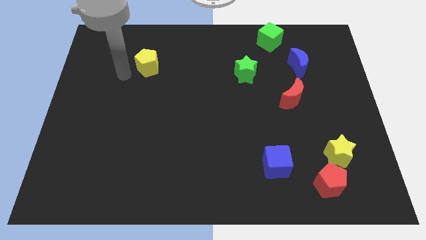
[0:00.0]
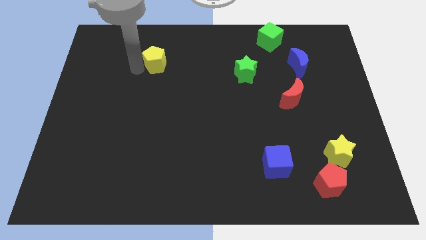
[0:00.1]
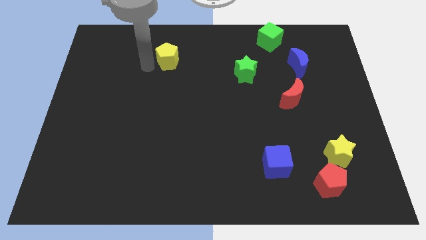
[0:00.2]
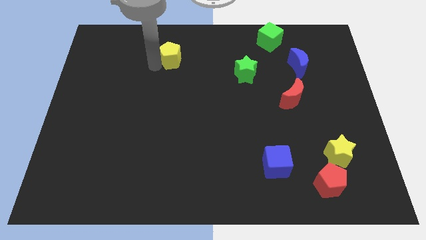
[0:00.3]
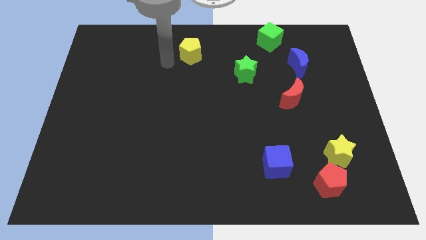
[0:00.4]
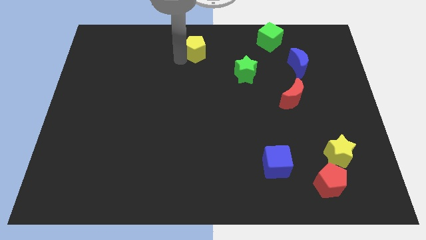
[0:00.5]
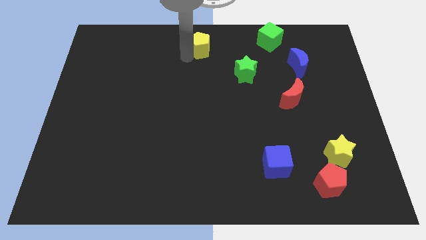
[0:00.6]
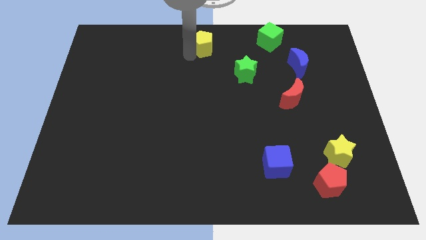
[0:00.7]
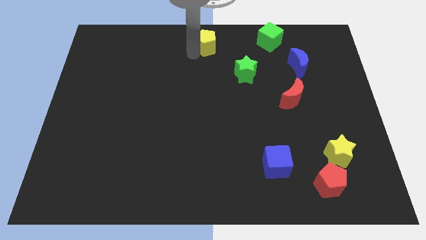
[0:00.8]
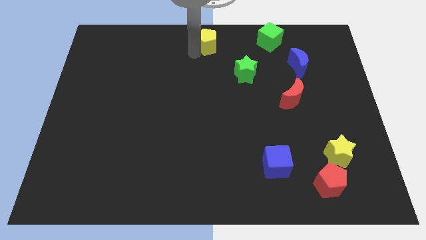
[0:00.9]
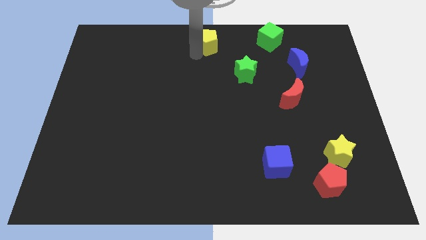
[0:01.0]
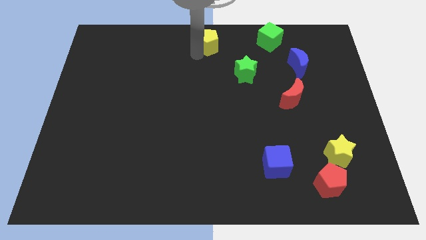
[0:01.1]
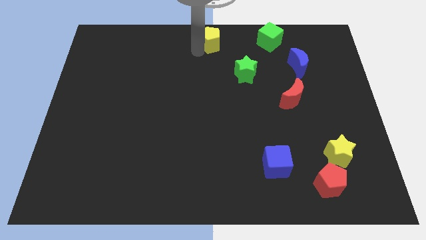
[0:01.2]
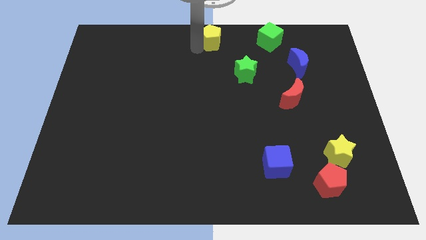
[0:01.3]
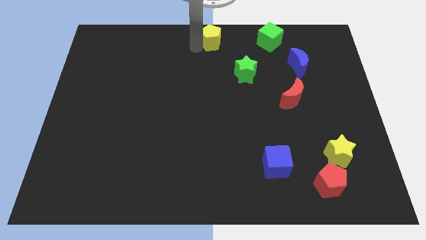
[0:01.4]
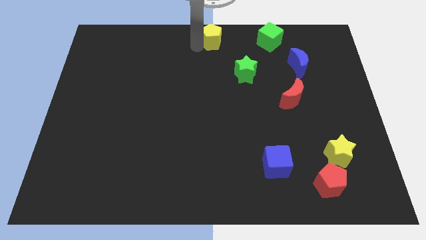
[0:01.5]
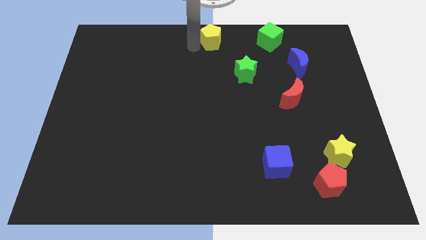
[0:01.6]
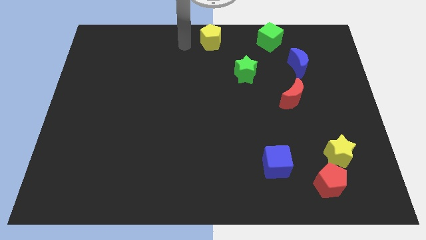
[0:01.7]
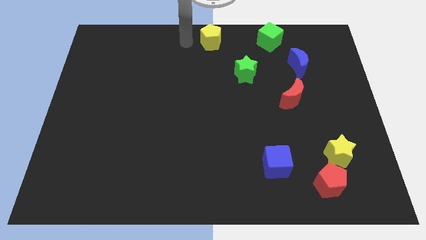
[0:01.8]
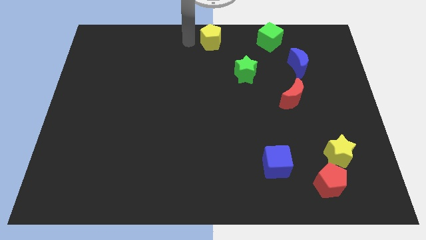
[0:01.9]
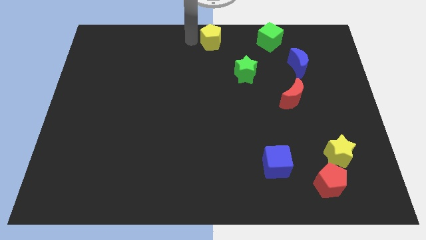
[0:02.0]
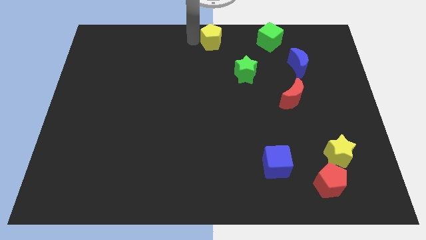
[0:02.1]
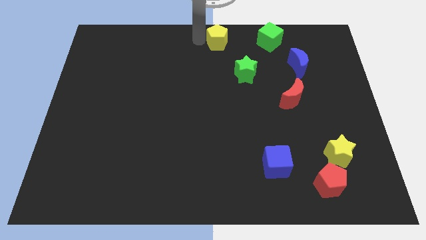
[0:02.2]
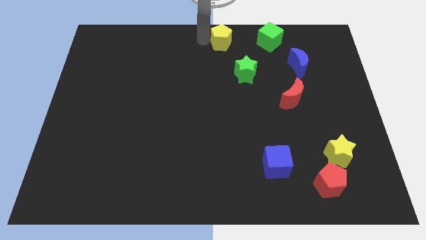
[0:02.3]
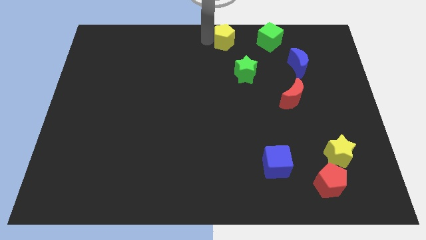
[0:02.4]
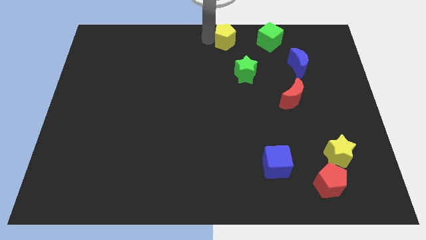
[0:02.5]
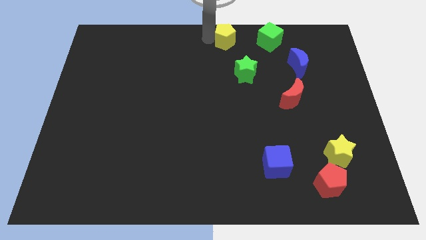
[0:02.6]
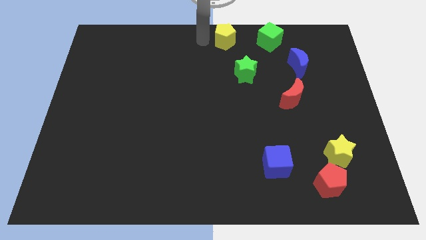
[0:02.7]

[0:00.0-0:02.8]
push the yellow pentagon towards the top center of the board

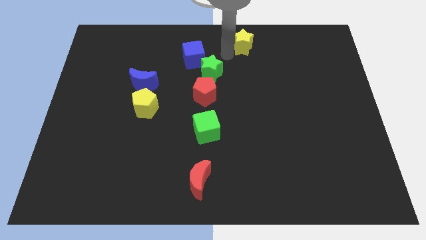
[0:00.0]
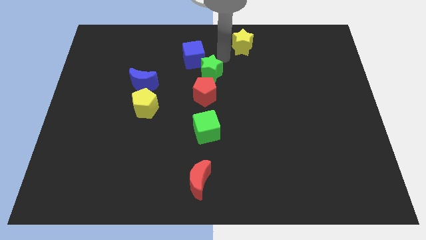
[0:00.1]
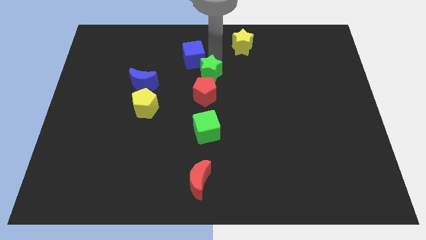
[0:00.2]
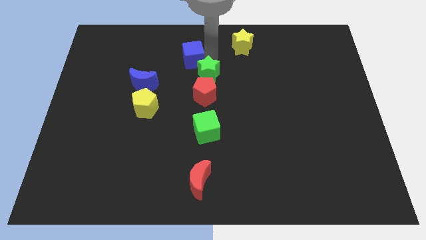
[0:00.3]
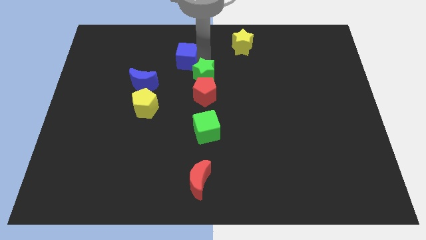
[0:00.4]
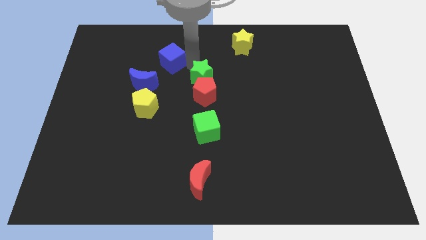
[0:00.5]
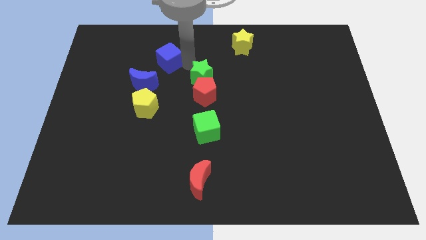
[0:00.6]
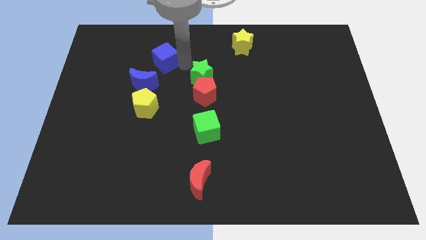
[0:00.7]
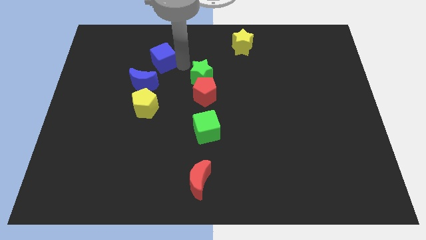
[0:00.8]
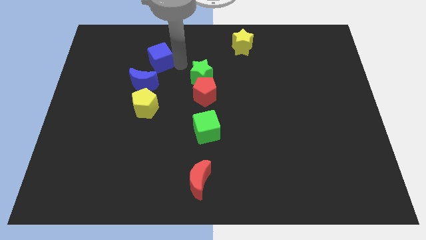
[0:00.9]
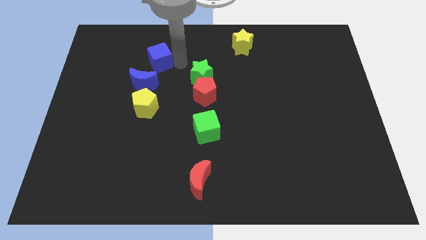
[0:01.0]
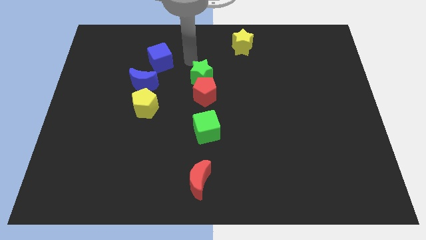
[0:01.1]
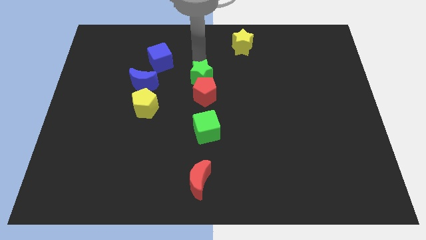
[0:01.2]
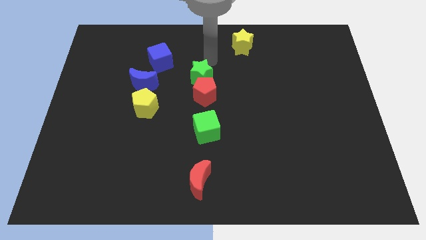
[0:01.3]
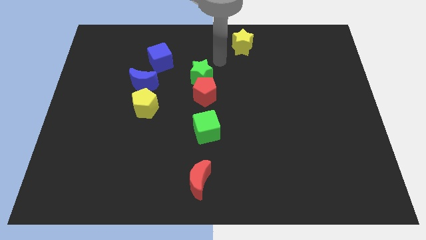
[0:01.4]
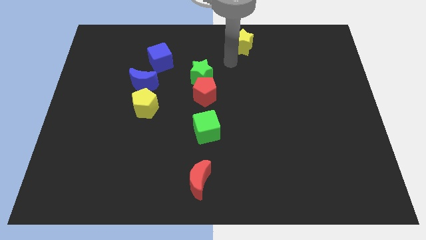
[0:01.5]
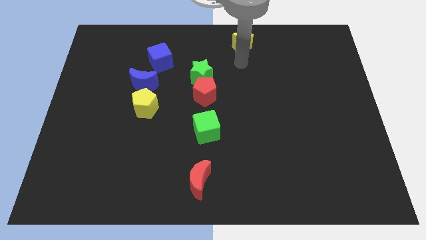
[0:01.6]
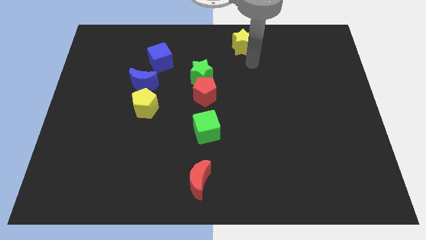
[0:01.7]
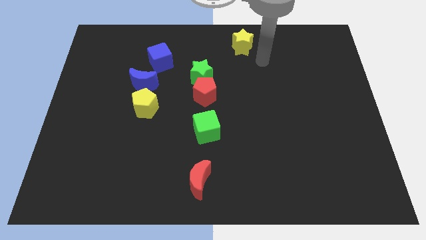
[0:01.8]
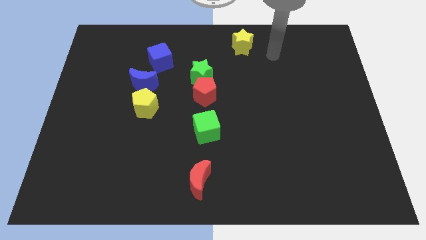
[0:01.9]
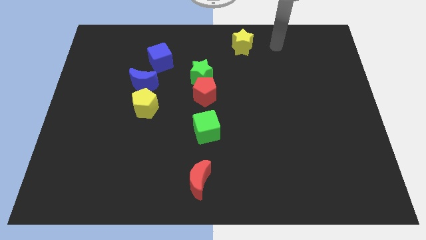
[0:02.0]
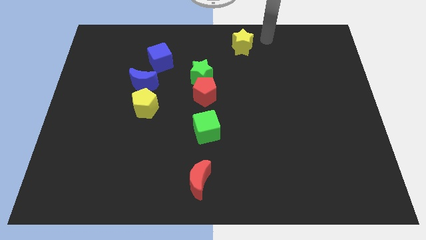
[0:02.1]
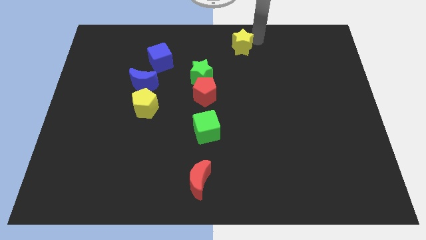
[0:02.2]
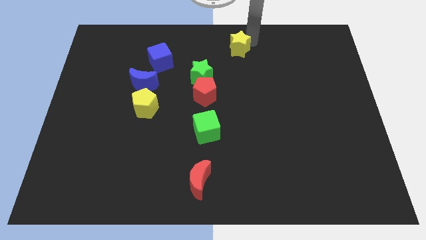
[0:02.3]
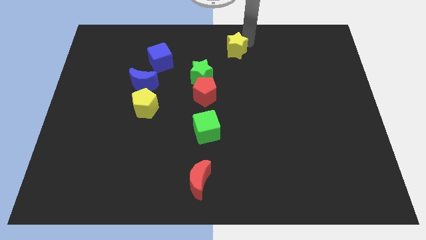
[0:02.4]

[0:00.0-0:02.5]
move blue cube towards the blue half moon

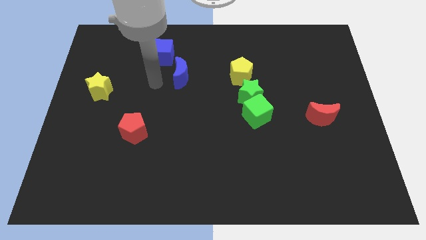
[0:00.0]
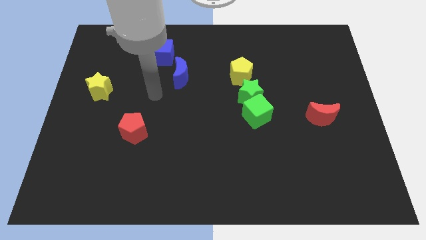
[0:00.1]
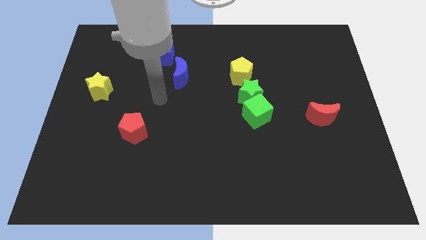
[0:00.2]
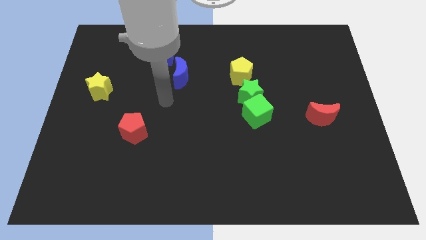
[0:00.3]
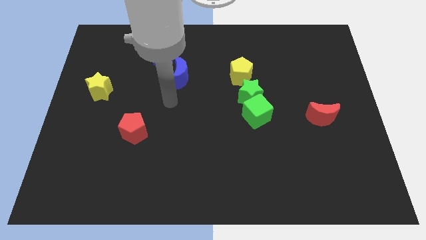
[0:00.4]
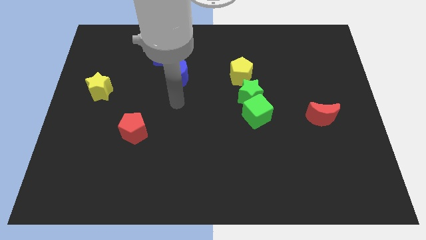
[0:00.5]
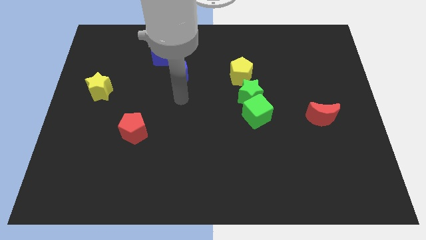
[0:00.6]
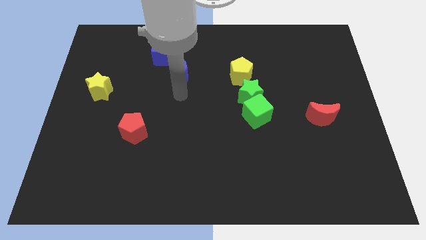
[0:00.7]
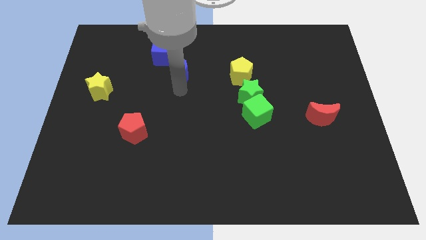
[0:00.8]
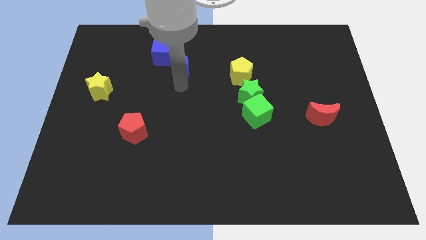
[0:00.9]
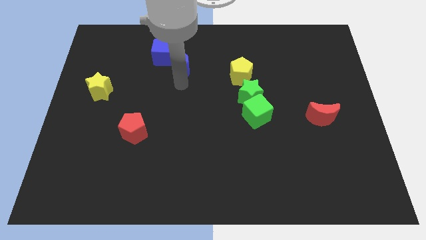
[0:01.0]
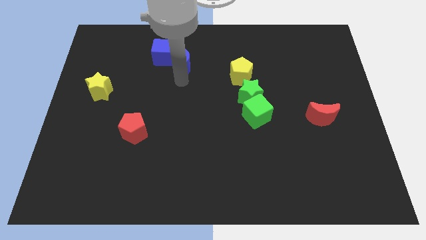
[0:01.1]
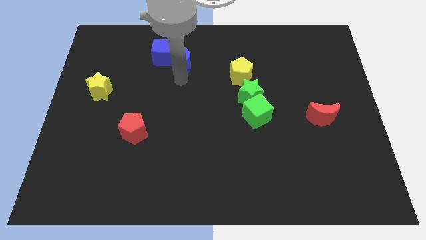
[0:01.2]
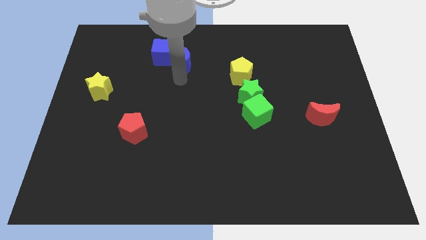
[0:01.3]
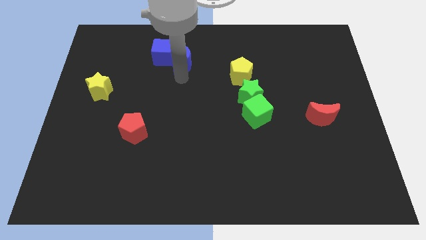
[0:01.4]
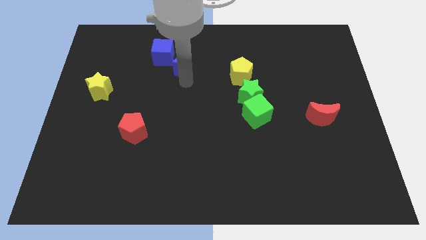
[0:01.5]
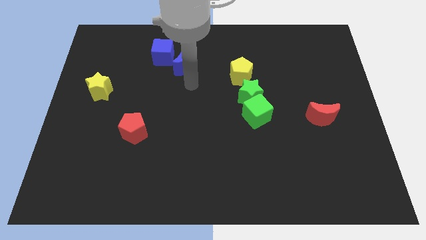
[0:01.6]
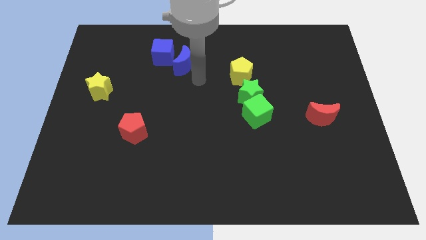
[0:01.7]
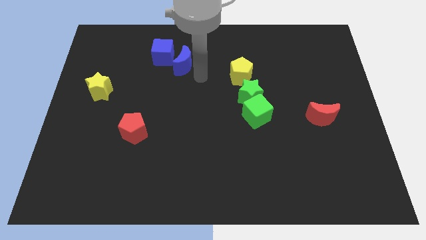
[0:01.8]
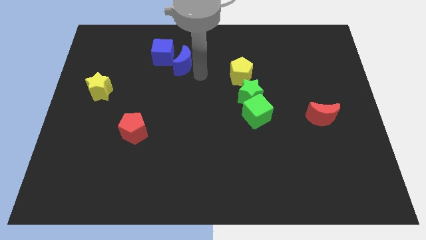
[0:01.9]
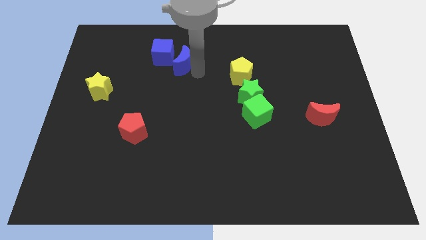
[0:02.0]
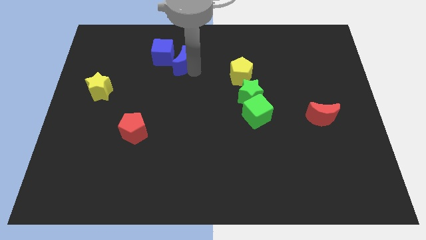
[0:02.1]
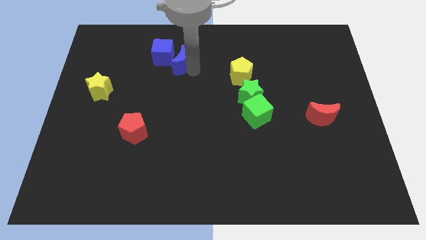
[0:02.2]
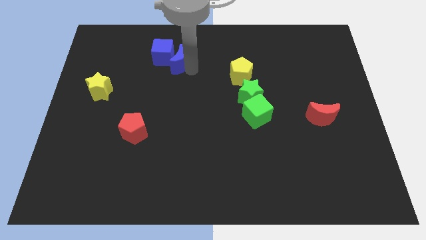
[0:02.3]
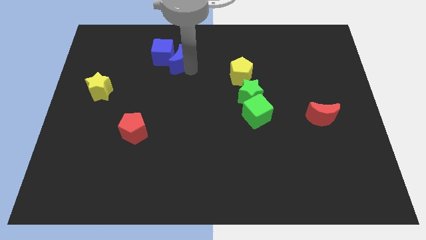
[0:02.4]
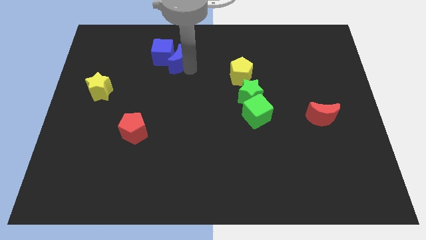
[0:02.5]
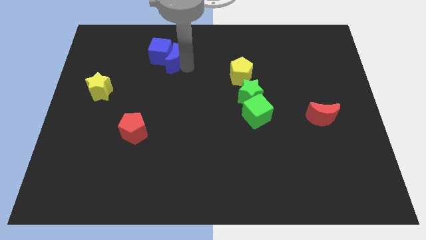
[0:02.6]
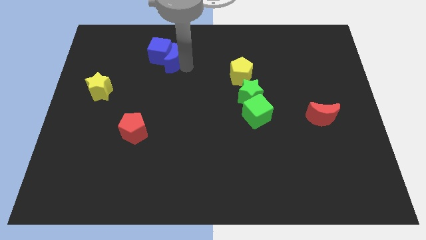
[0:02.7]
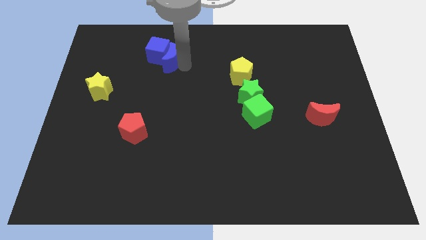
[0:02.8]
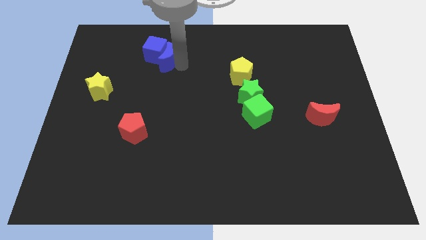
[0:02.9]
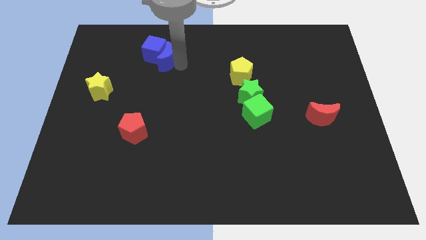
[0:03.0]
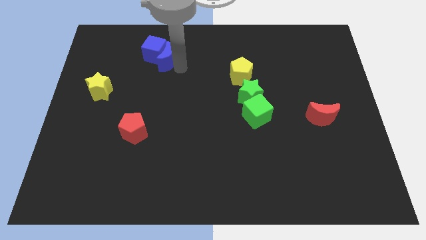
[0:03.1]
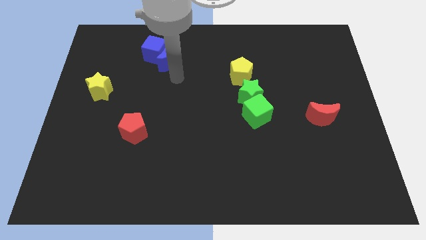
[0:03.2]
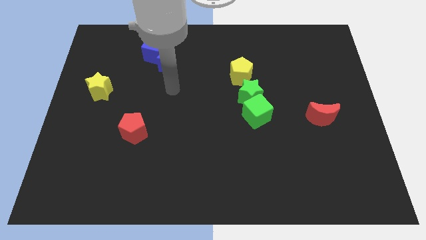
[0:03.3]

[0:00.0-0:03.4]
move the blue crescent close to the blue cube

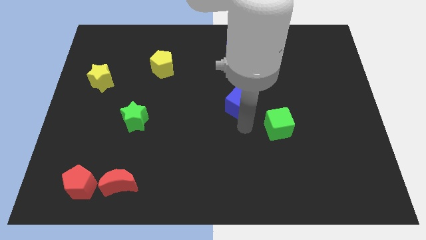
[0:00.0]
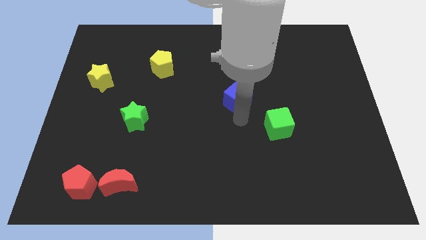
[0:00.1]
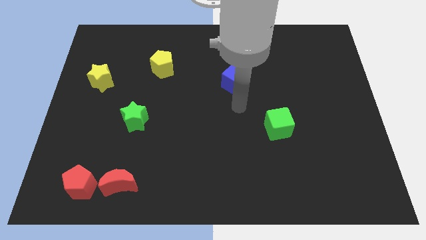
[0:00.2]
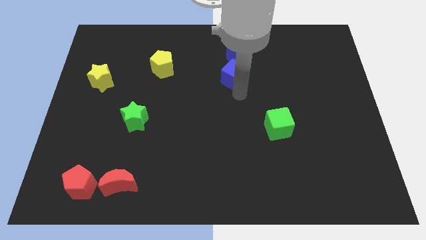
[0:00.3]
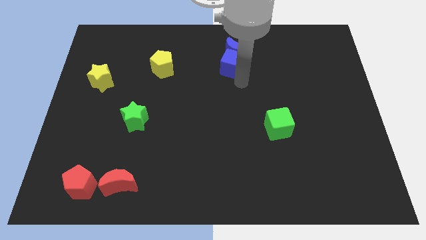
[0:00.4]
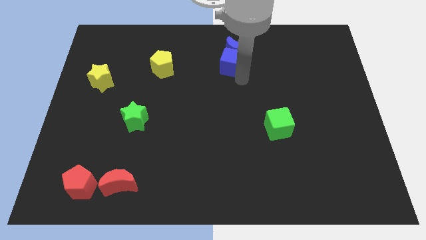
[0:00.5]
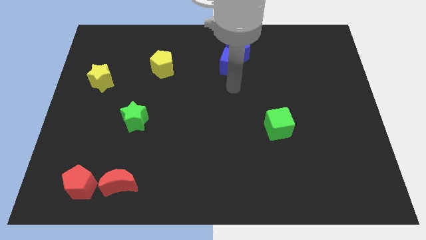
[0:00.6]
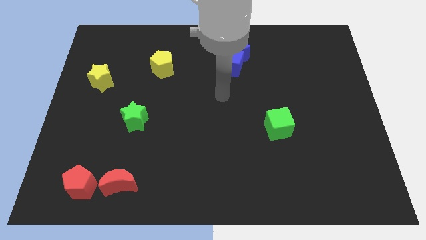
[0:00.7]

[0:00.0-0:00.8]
place the blue cube below the blue crescent
